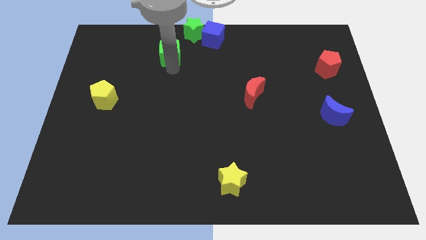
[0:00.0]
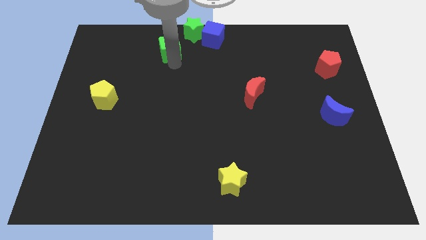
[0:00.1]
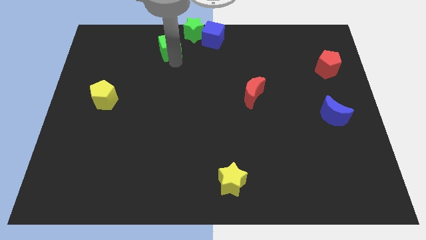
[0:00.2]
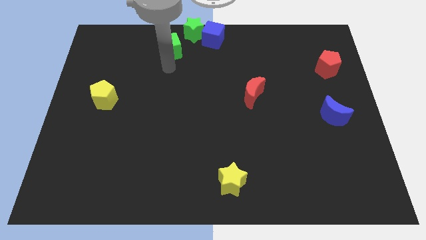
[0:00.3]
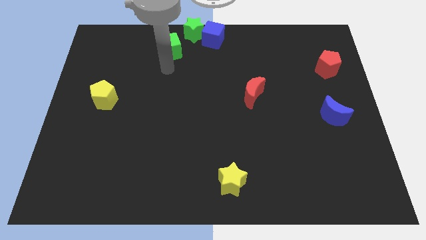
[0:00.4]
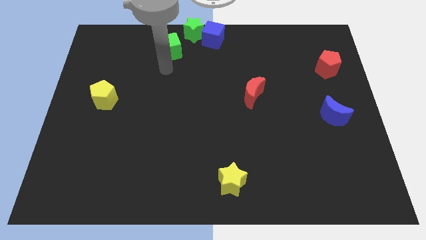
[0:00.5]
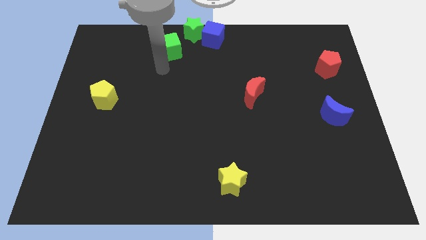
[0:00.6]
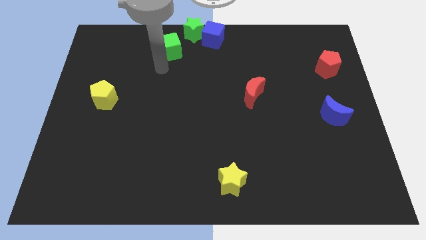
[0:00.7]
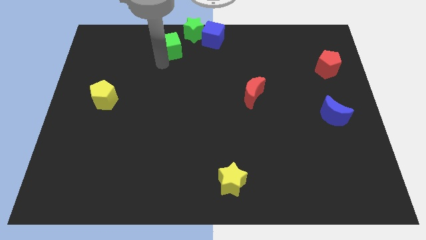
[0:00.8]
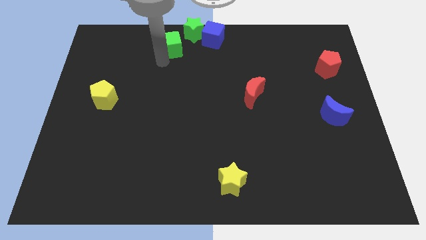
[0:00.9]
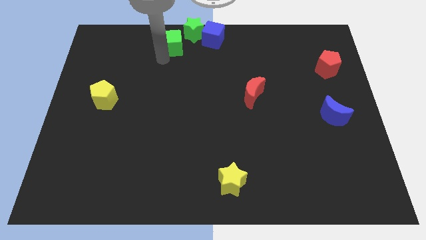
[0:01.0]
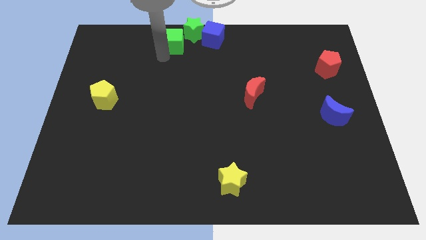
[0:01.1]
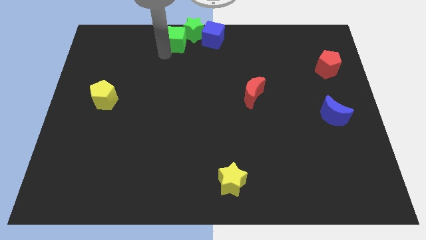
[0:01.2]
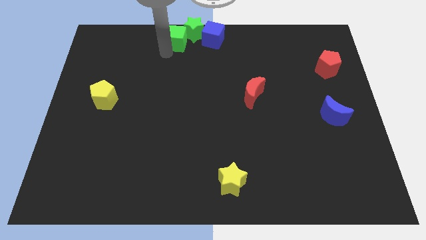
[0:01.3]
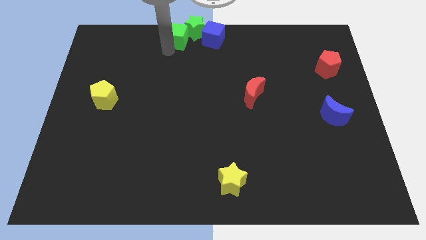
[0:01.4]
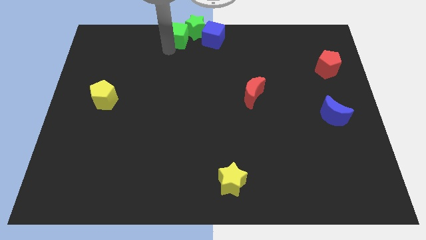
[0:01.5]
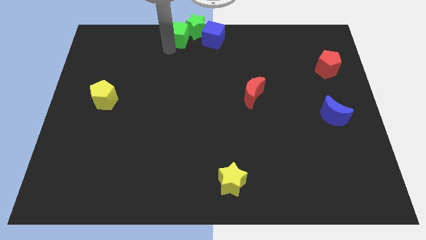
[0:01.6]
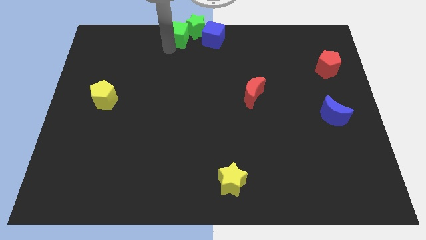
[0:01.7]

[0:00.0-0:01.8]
slide the green cube close to the green star

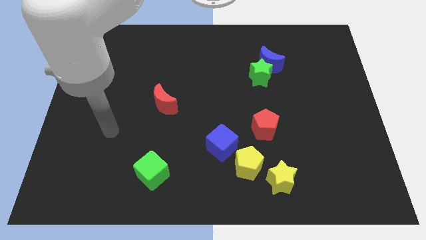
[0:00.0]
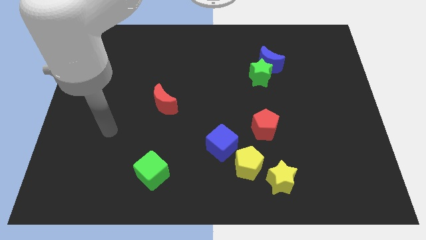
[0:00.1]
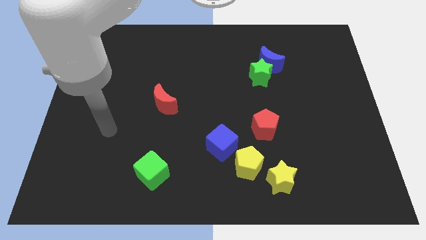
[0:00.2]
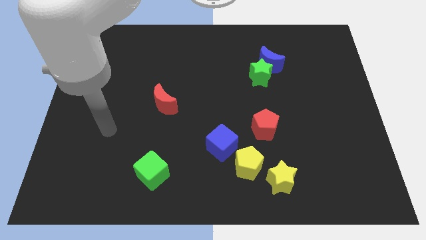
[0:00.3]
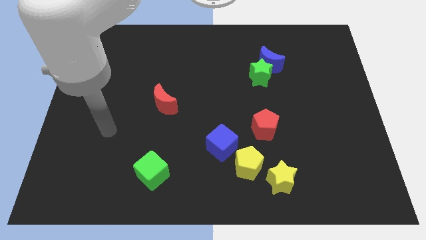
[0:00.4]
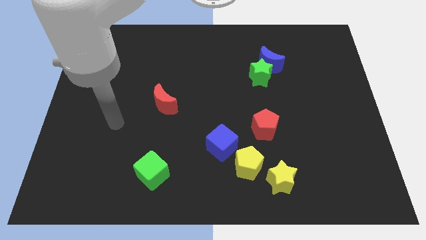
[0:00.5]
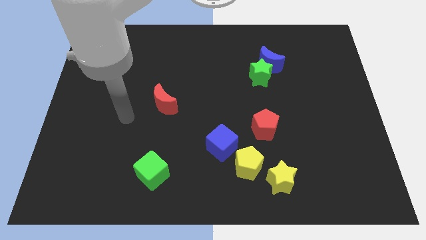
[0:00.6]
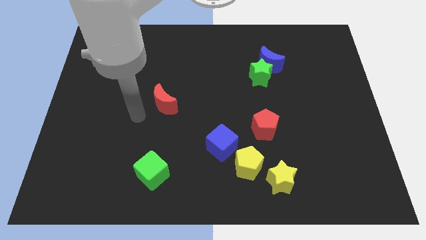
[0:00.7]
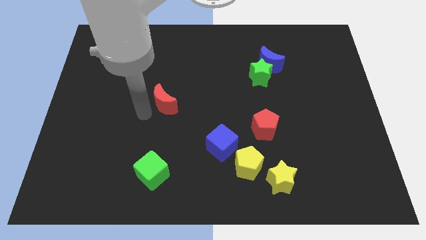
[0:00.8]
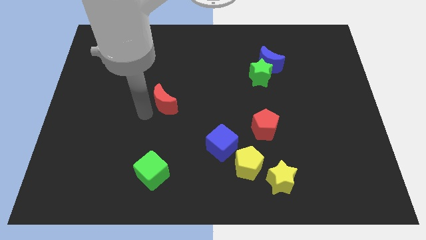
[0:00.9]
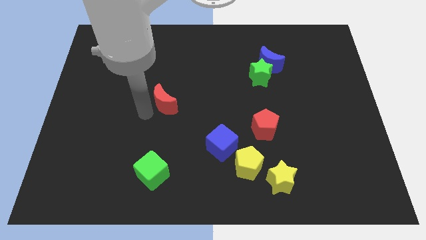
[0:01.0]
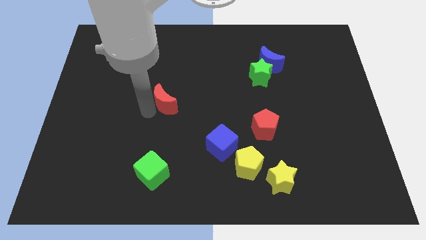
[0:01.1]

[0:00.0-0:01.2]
point the arm to the left of the red crescent

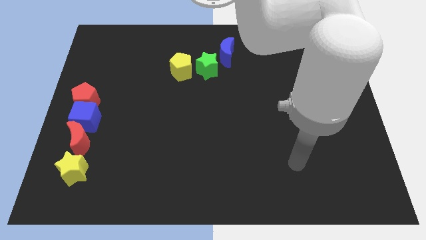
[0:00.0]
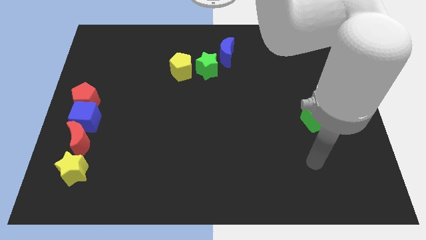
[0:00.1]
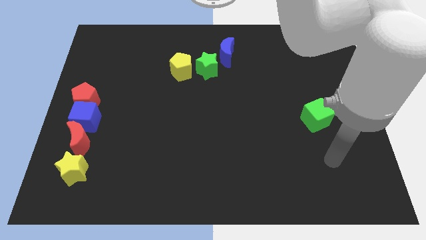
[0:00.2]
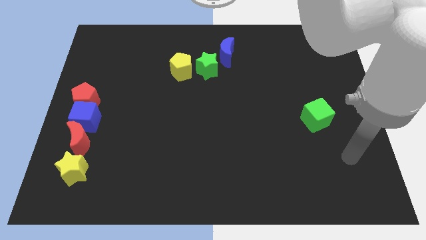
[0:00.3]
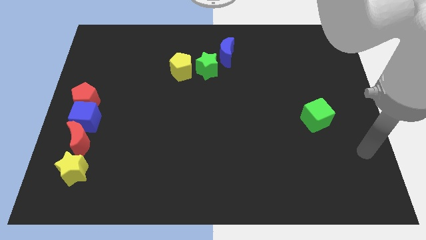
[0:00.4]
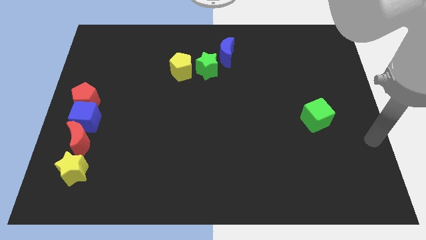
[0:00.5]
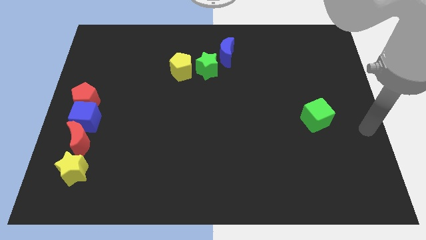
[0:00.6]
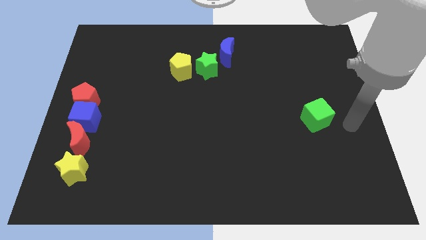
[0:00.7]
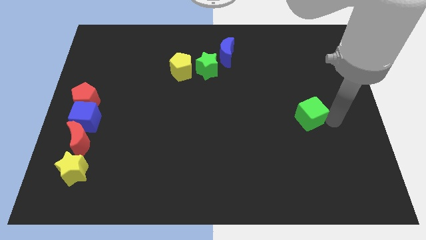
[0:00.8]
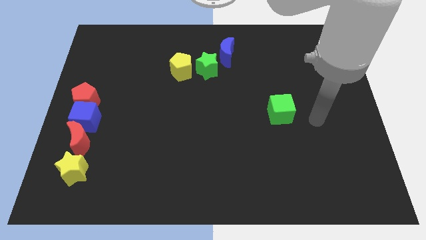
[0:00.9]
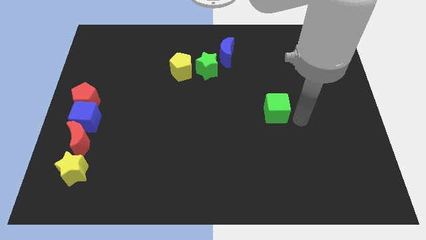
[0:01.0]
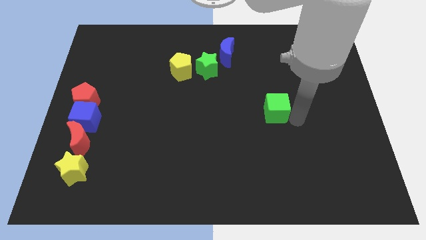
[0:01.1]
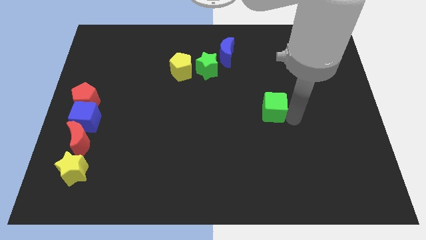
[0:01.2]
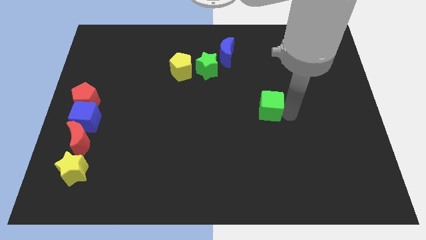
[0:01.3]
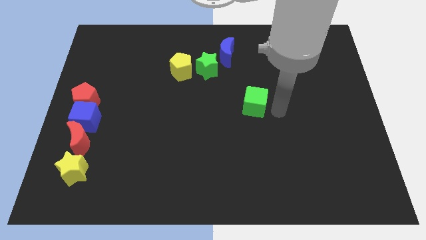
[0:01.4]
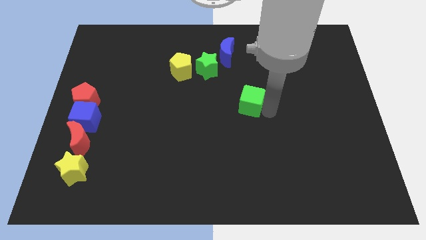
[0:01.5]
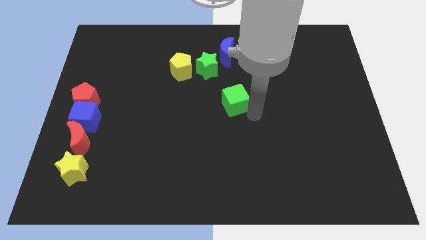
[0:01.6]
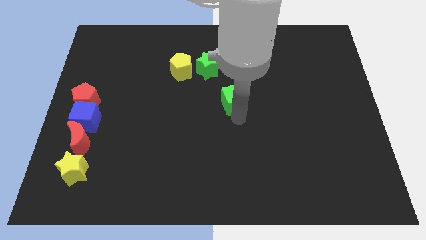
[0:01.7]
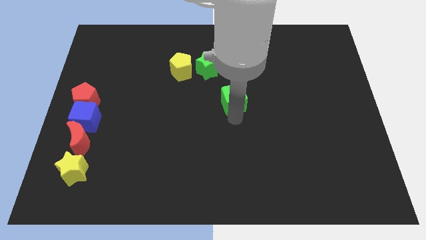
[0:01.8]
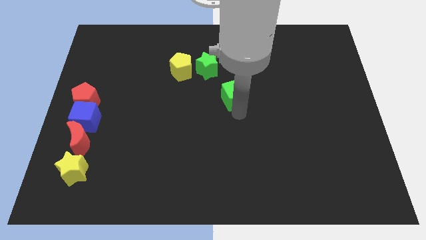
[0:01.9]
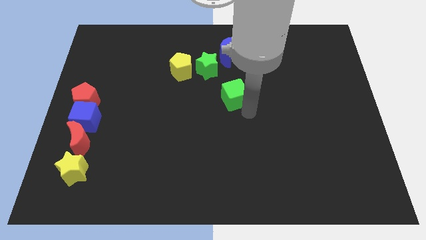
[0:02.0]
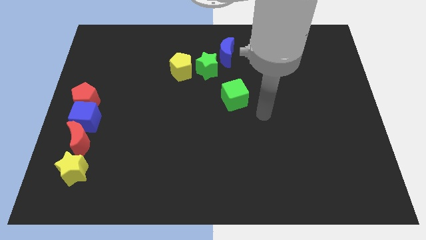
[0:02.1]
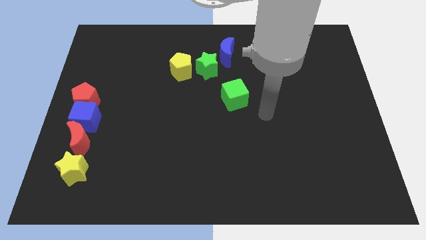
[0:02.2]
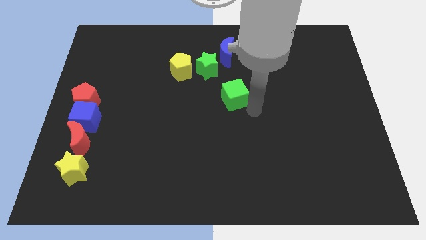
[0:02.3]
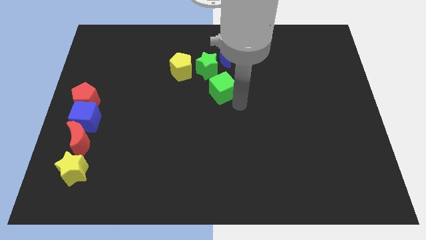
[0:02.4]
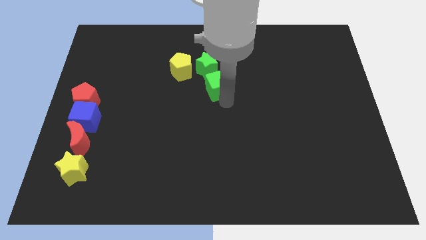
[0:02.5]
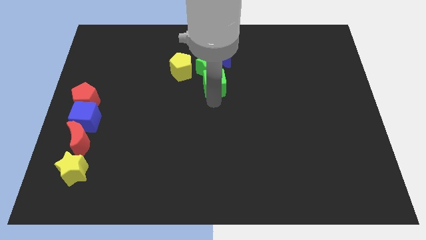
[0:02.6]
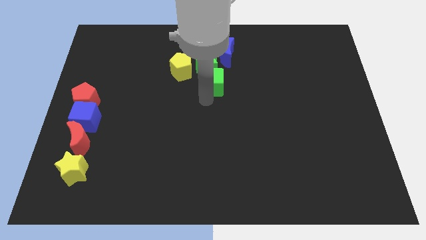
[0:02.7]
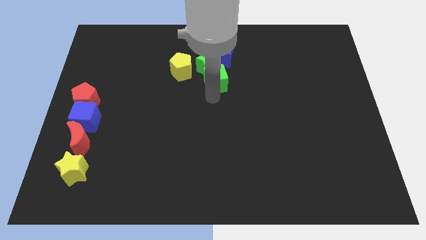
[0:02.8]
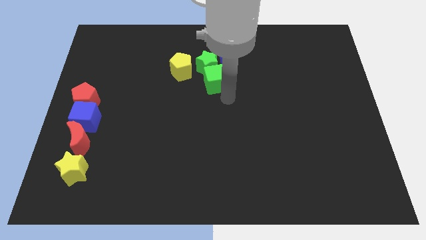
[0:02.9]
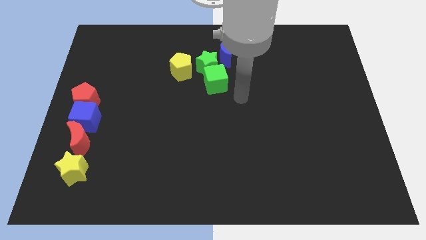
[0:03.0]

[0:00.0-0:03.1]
push the green cube into green star

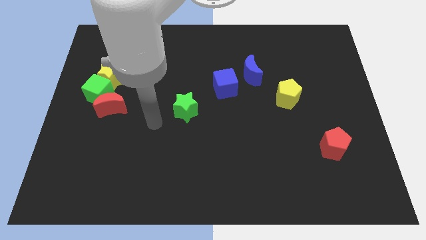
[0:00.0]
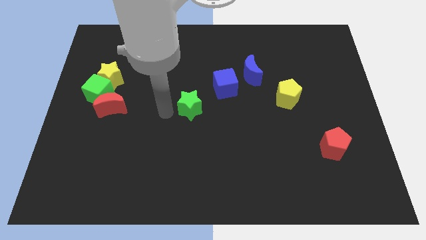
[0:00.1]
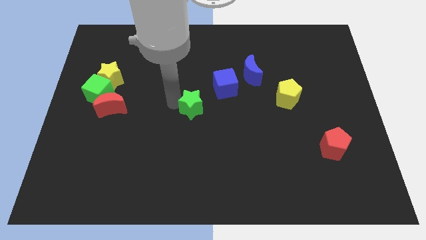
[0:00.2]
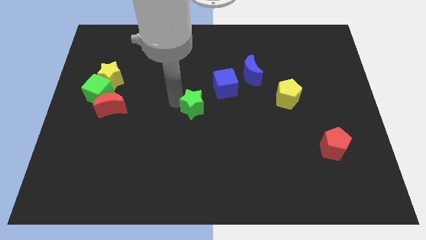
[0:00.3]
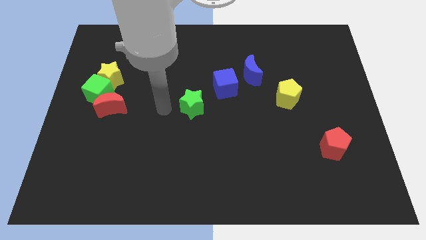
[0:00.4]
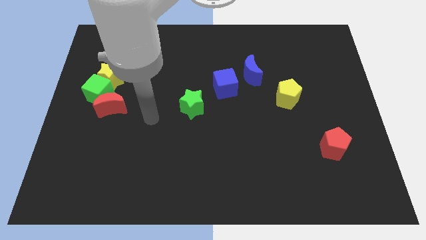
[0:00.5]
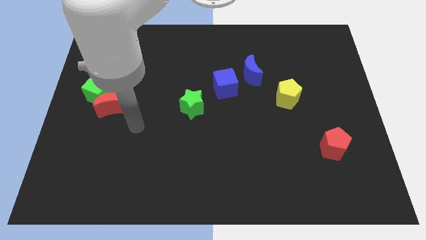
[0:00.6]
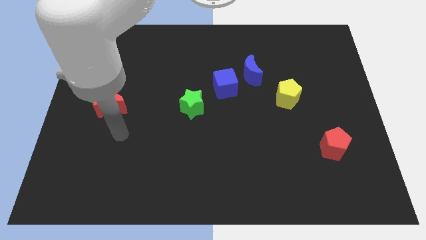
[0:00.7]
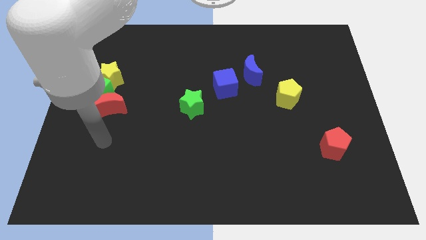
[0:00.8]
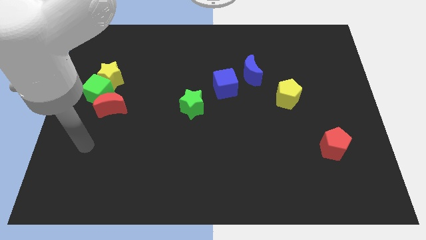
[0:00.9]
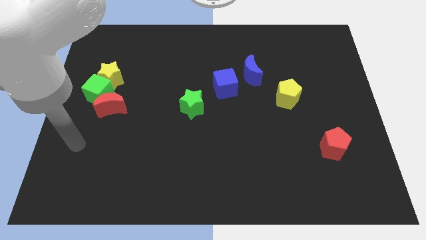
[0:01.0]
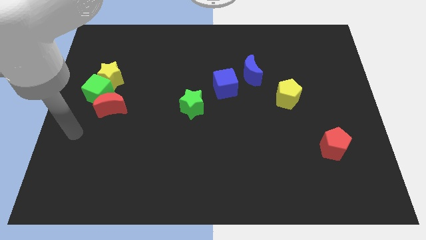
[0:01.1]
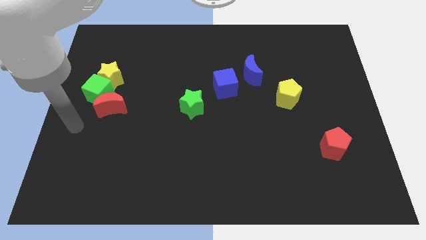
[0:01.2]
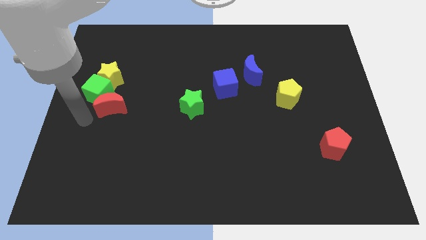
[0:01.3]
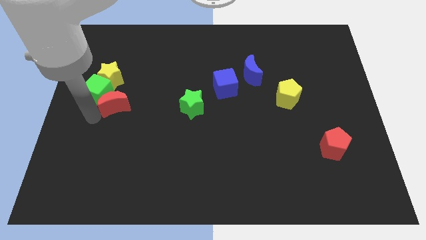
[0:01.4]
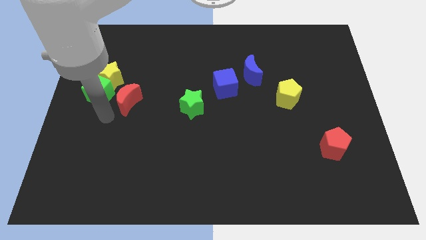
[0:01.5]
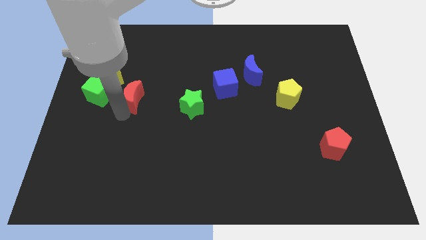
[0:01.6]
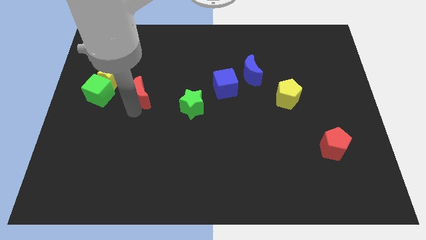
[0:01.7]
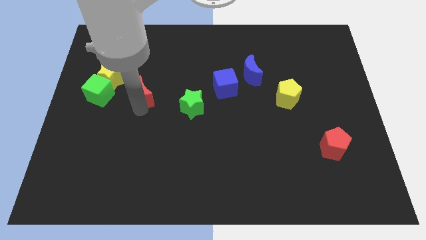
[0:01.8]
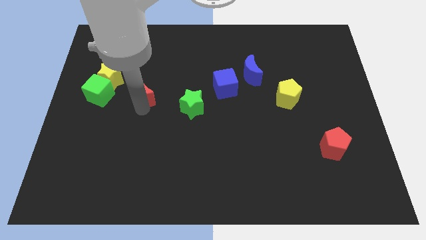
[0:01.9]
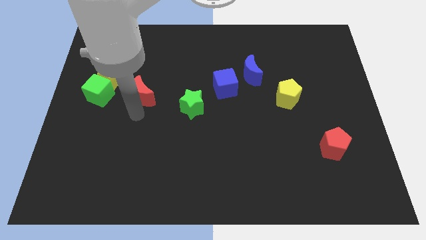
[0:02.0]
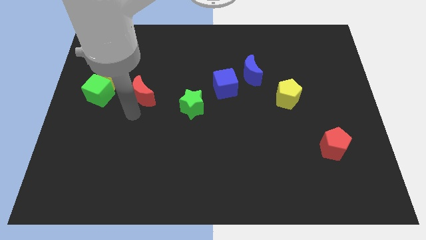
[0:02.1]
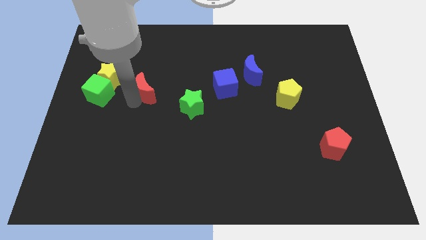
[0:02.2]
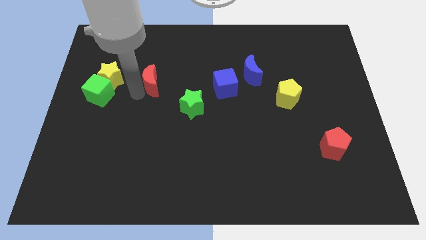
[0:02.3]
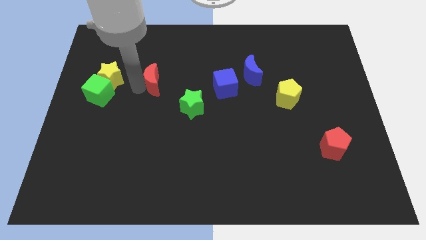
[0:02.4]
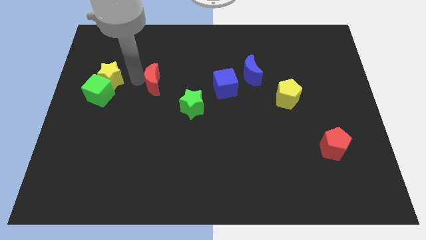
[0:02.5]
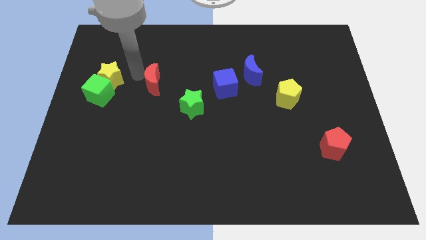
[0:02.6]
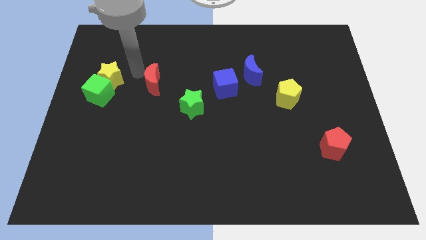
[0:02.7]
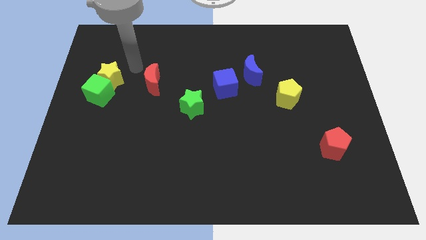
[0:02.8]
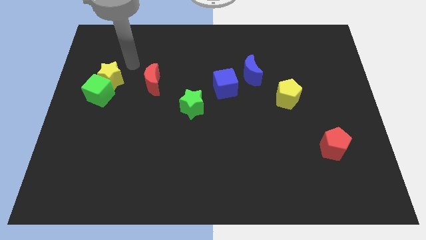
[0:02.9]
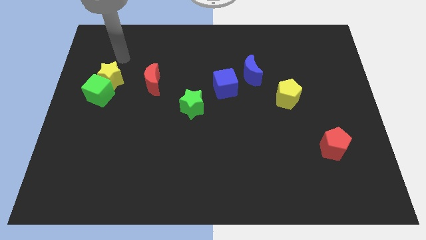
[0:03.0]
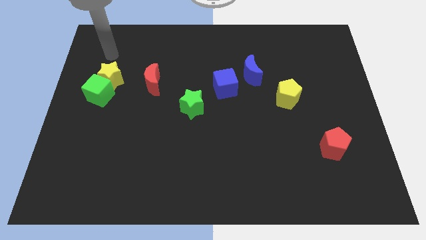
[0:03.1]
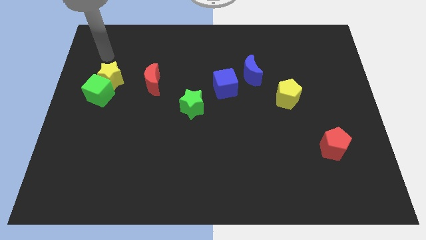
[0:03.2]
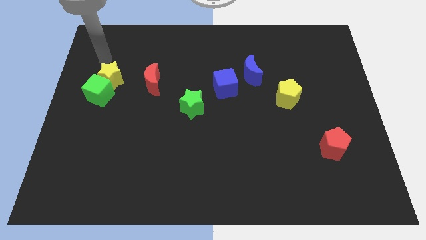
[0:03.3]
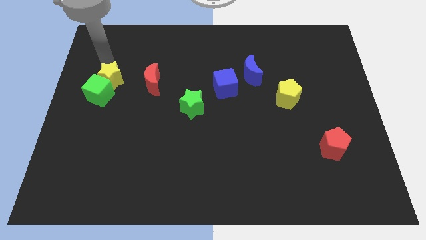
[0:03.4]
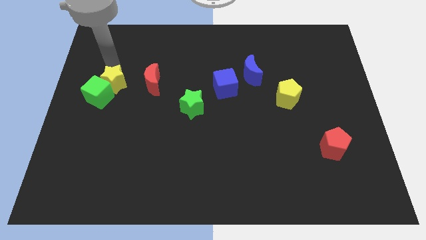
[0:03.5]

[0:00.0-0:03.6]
move the red crescent up slightly
